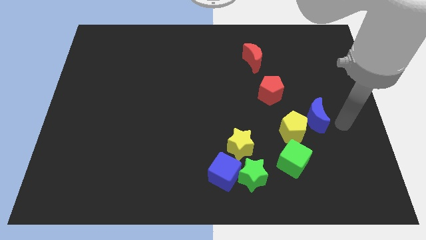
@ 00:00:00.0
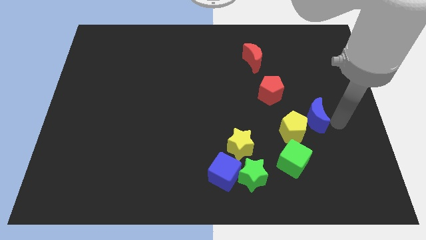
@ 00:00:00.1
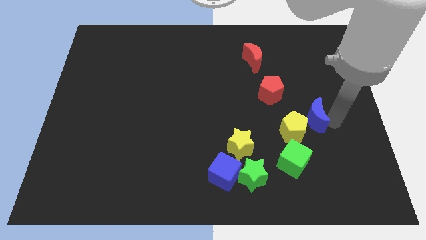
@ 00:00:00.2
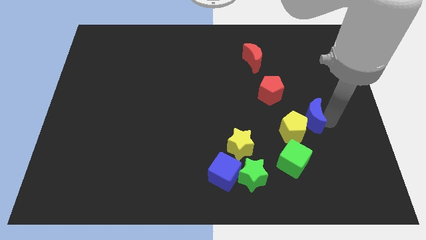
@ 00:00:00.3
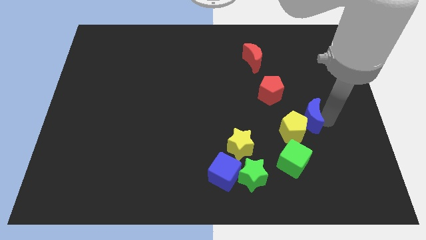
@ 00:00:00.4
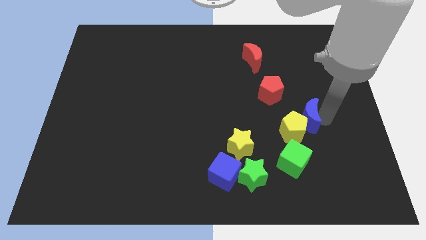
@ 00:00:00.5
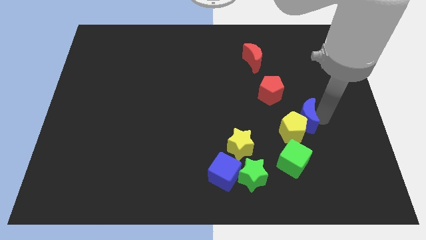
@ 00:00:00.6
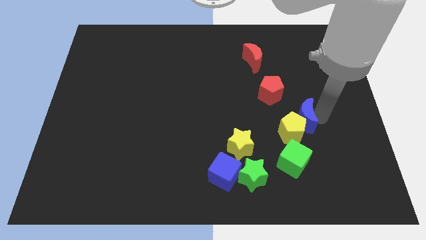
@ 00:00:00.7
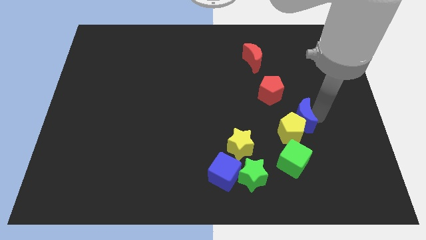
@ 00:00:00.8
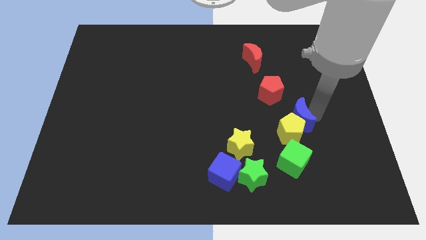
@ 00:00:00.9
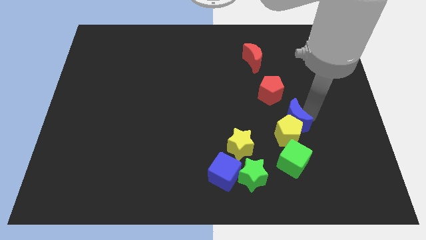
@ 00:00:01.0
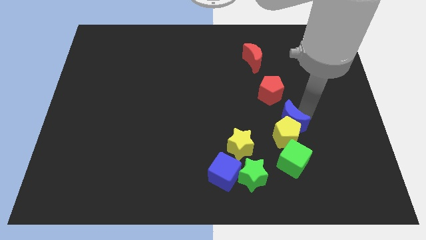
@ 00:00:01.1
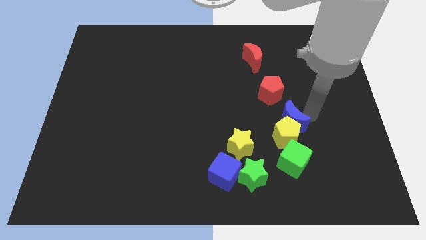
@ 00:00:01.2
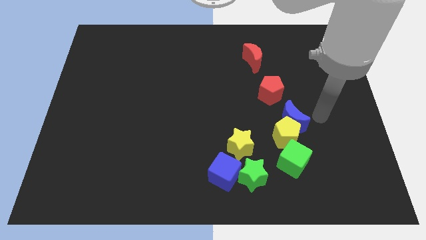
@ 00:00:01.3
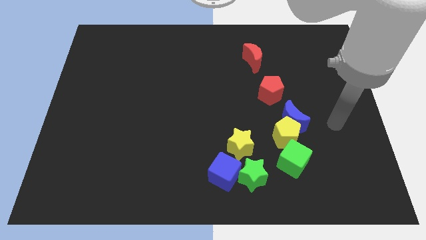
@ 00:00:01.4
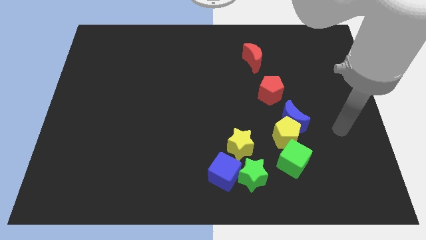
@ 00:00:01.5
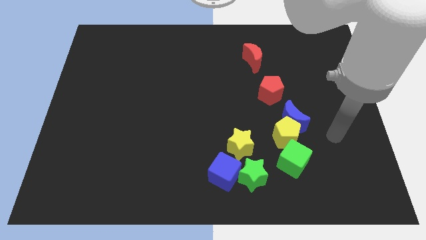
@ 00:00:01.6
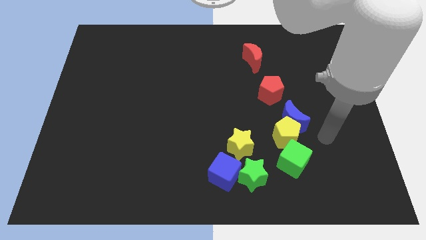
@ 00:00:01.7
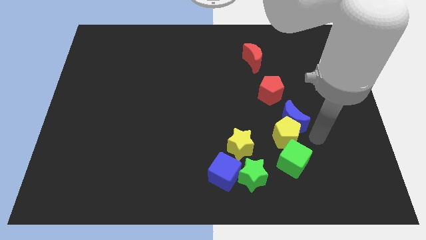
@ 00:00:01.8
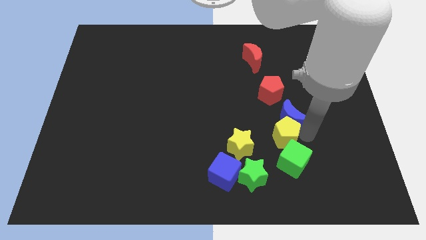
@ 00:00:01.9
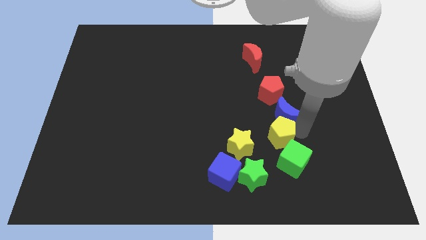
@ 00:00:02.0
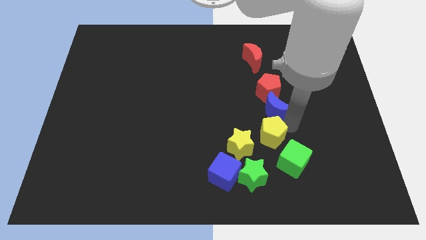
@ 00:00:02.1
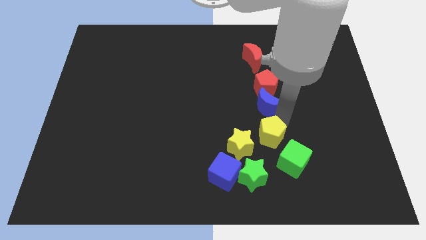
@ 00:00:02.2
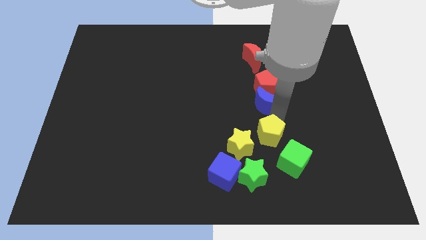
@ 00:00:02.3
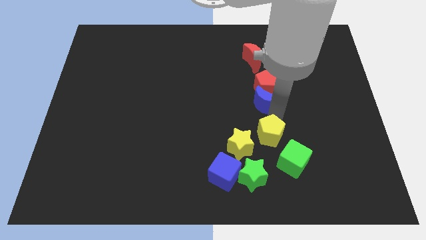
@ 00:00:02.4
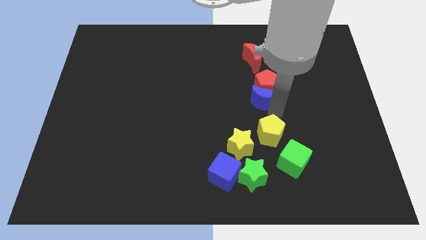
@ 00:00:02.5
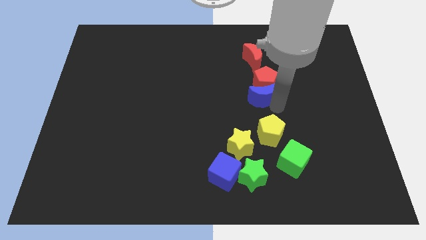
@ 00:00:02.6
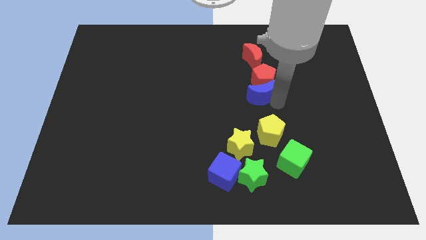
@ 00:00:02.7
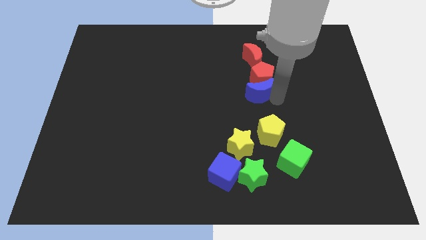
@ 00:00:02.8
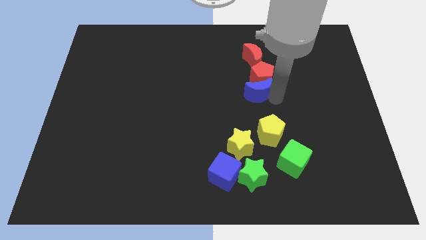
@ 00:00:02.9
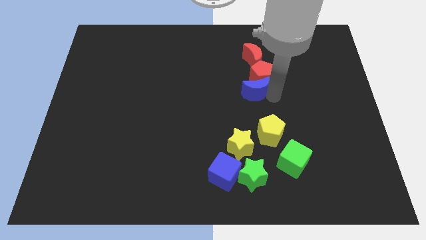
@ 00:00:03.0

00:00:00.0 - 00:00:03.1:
move blue moon into red pentagon

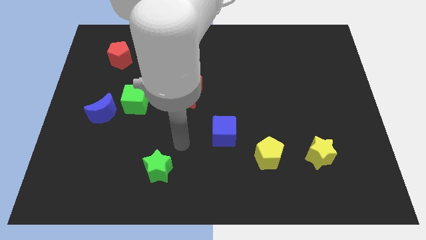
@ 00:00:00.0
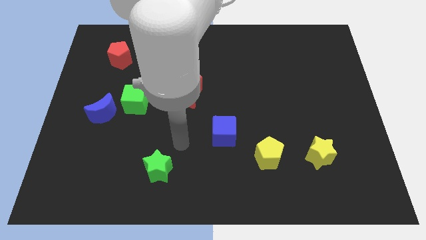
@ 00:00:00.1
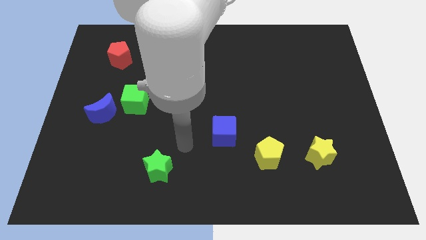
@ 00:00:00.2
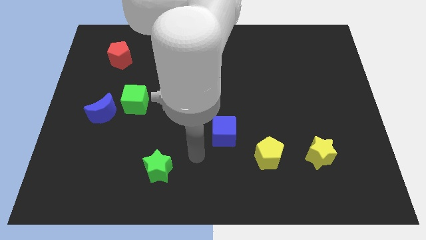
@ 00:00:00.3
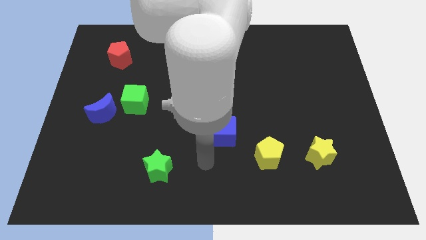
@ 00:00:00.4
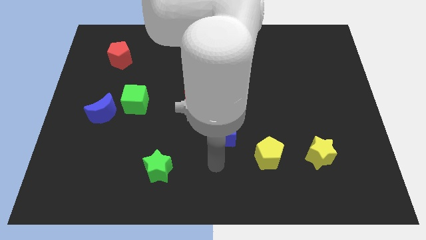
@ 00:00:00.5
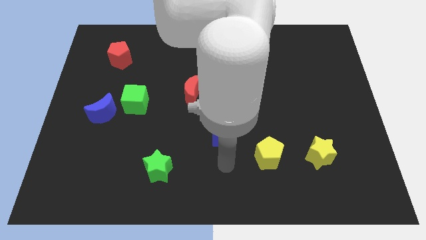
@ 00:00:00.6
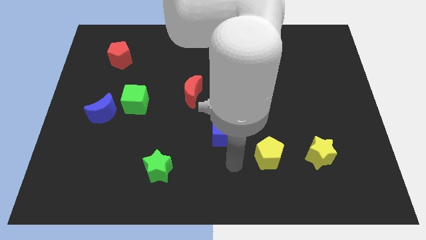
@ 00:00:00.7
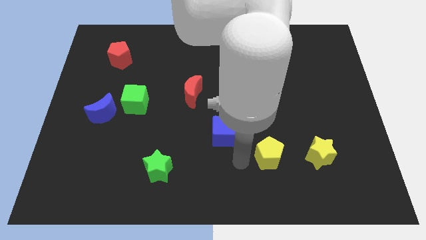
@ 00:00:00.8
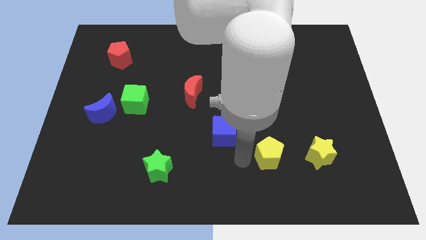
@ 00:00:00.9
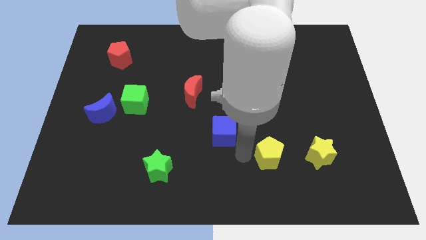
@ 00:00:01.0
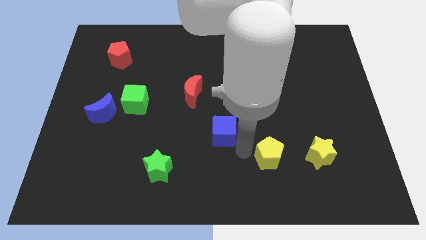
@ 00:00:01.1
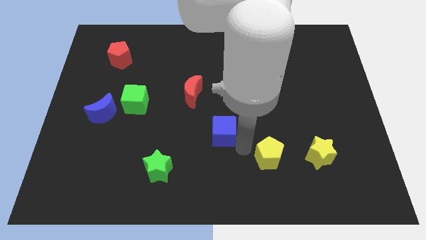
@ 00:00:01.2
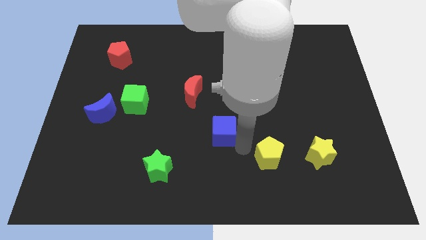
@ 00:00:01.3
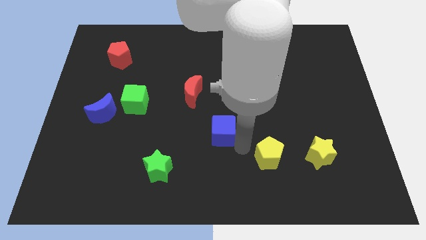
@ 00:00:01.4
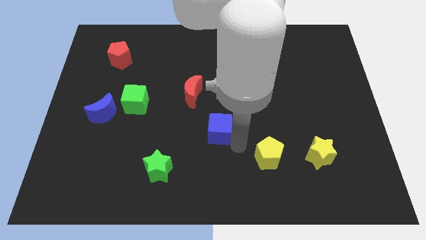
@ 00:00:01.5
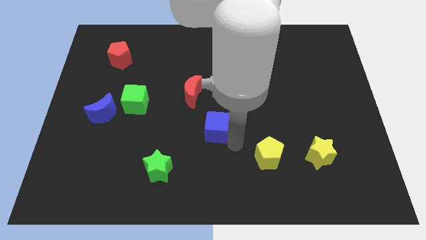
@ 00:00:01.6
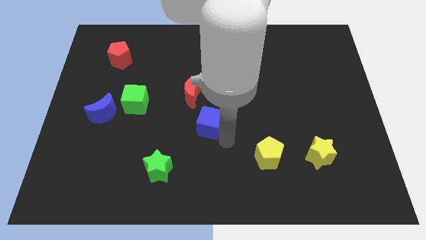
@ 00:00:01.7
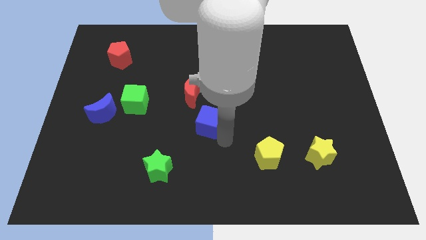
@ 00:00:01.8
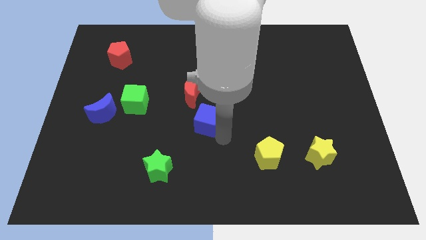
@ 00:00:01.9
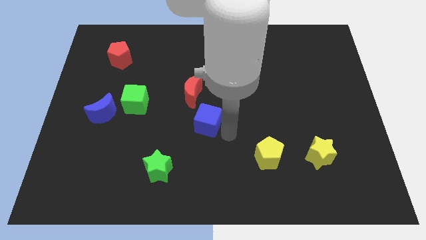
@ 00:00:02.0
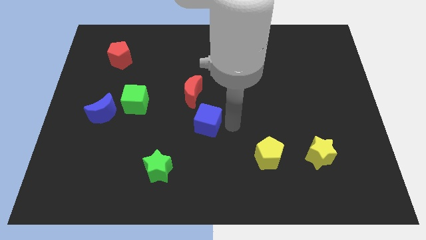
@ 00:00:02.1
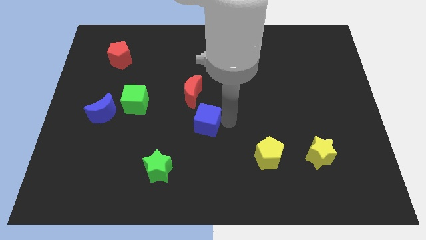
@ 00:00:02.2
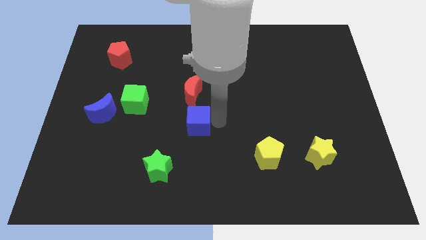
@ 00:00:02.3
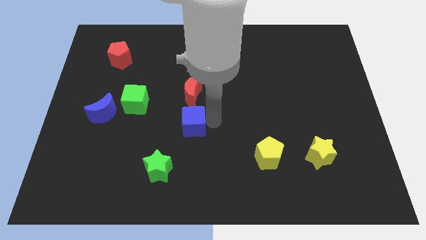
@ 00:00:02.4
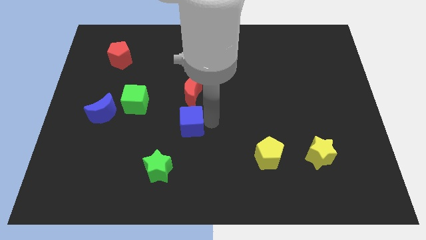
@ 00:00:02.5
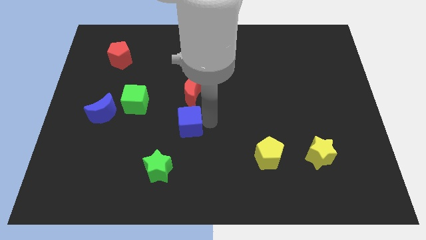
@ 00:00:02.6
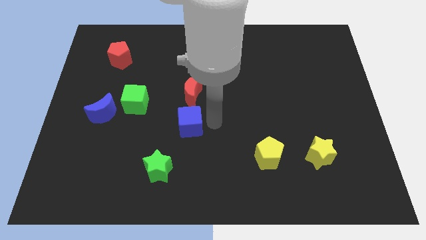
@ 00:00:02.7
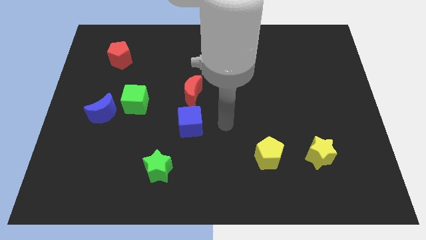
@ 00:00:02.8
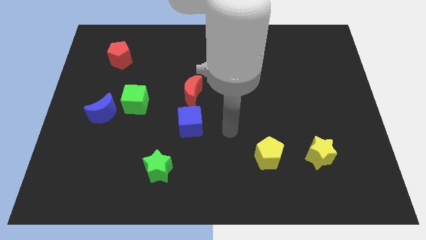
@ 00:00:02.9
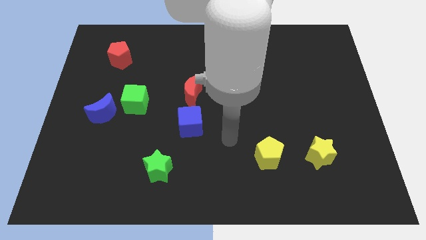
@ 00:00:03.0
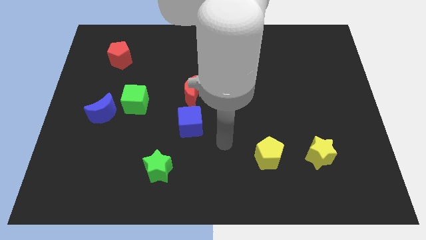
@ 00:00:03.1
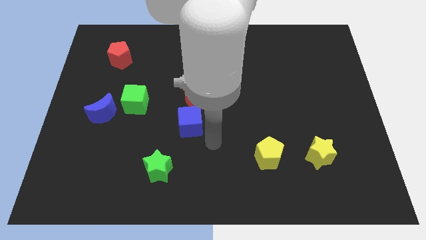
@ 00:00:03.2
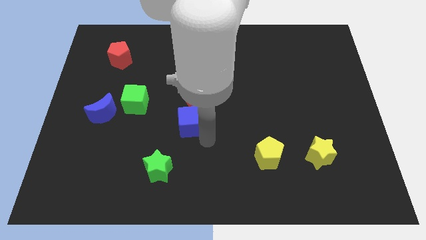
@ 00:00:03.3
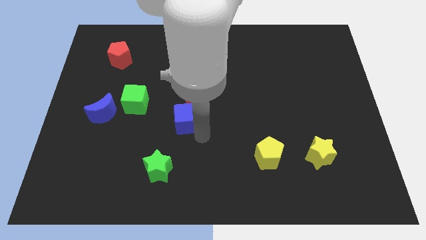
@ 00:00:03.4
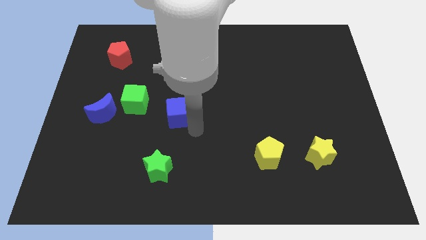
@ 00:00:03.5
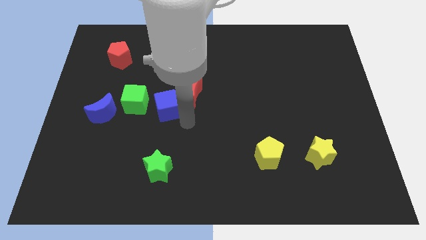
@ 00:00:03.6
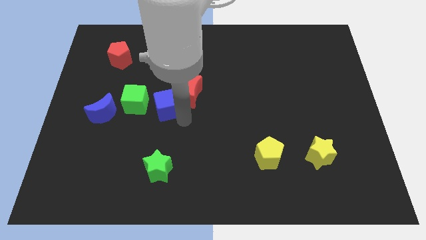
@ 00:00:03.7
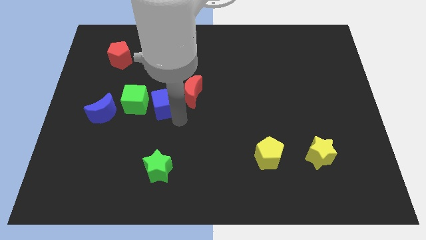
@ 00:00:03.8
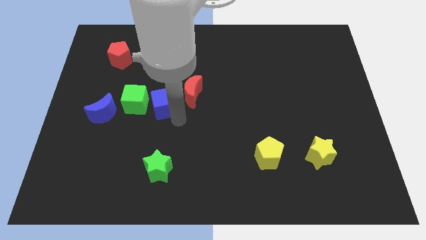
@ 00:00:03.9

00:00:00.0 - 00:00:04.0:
place blue cube between red moon and green cube

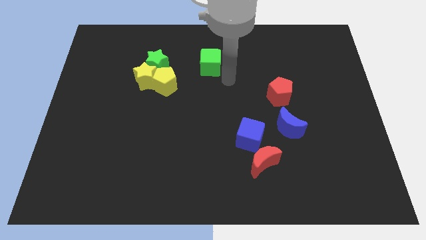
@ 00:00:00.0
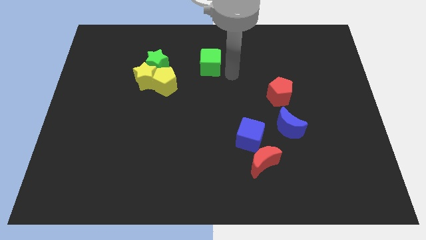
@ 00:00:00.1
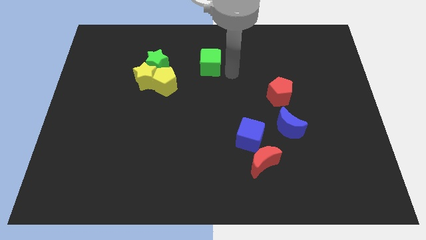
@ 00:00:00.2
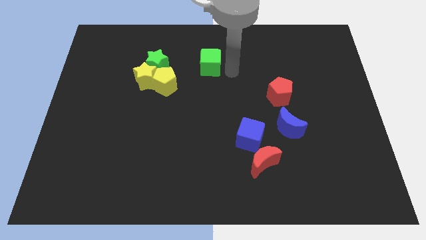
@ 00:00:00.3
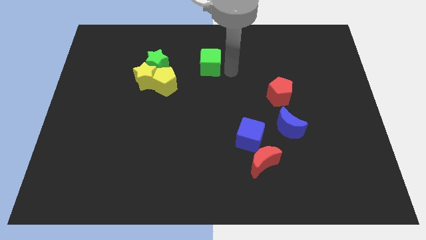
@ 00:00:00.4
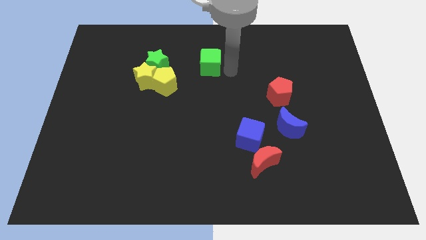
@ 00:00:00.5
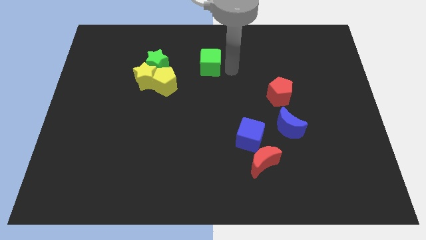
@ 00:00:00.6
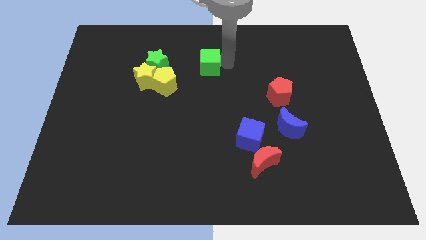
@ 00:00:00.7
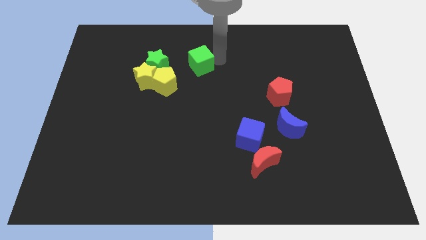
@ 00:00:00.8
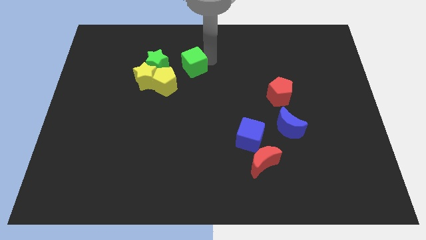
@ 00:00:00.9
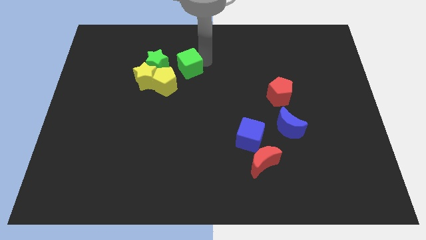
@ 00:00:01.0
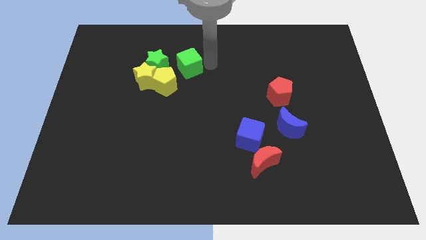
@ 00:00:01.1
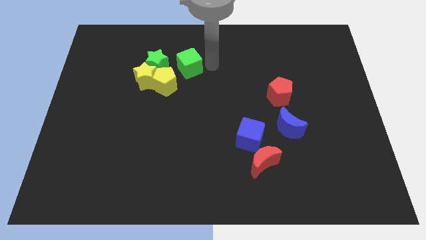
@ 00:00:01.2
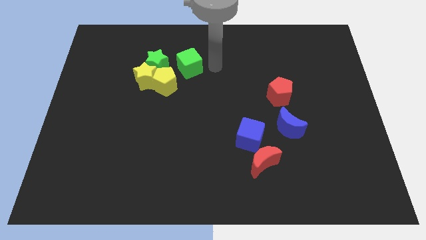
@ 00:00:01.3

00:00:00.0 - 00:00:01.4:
push the green cube towards the yellow pentagon

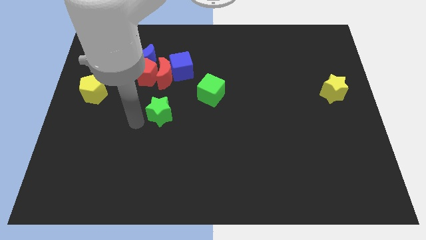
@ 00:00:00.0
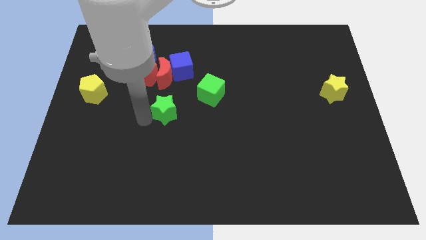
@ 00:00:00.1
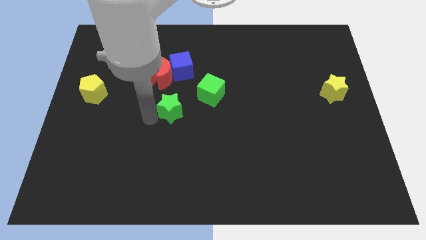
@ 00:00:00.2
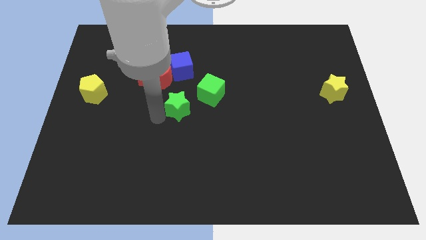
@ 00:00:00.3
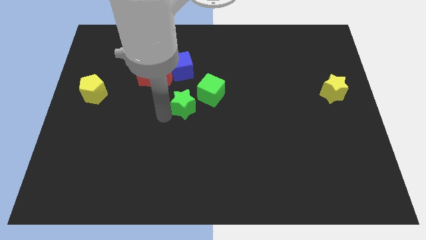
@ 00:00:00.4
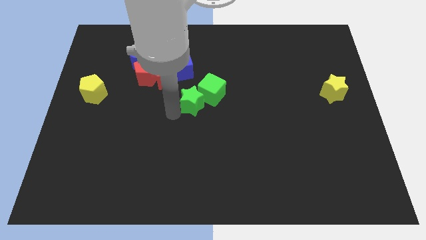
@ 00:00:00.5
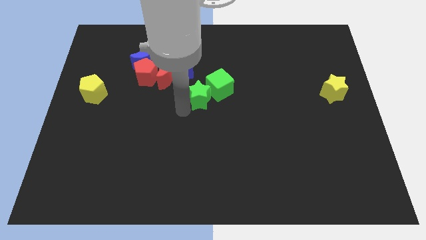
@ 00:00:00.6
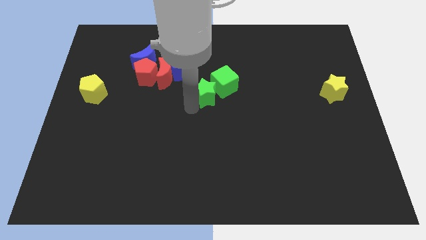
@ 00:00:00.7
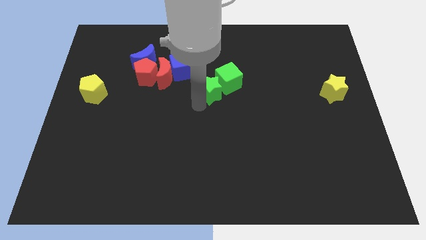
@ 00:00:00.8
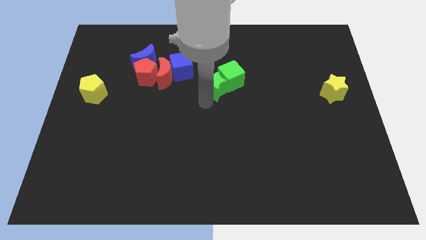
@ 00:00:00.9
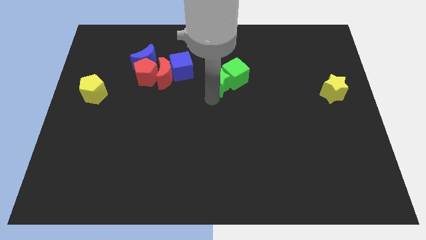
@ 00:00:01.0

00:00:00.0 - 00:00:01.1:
move green star into green cube
